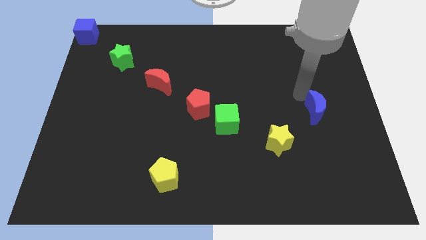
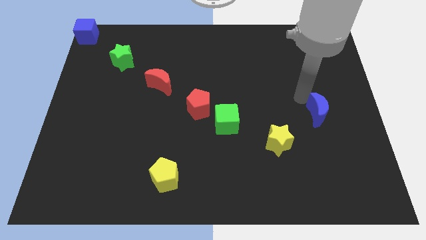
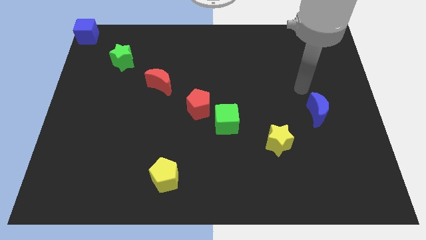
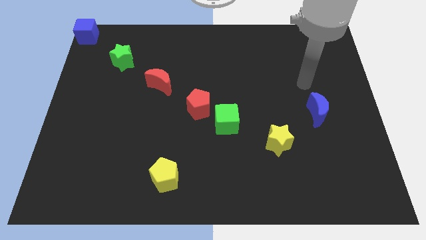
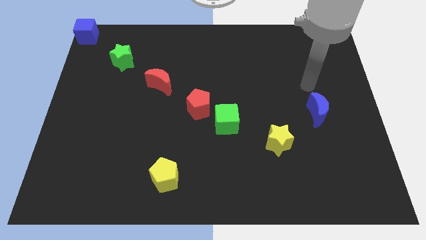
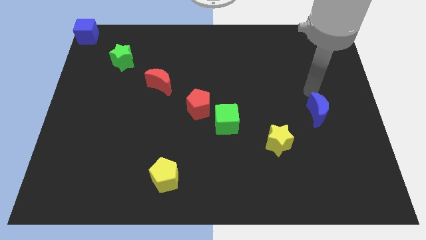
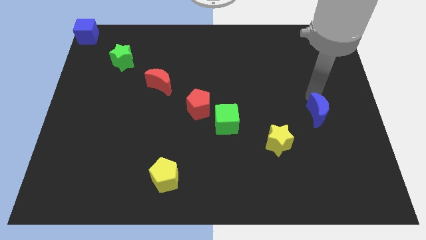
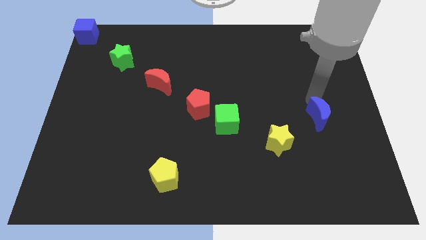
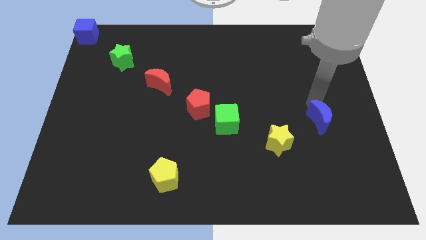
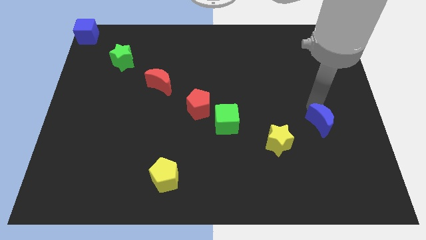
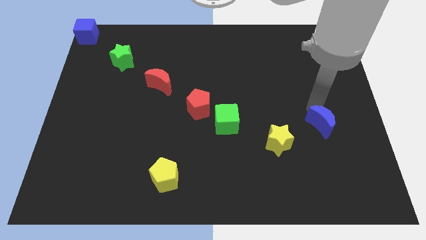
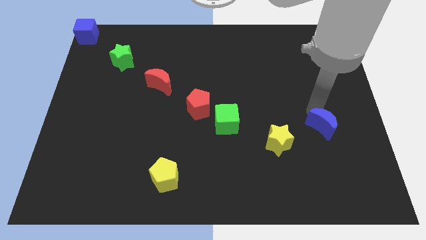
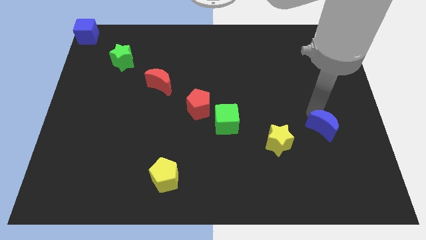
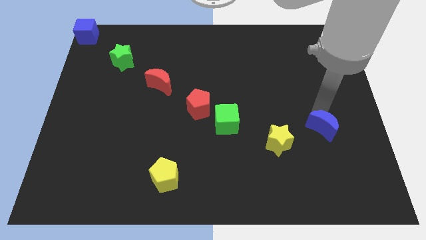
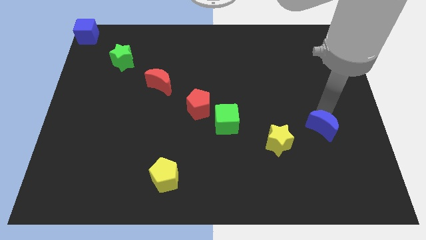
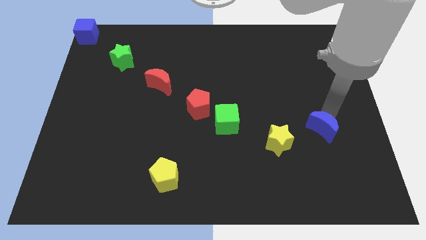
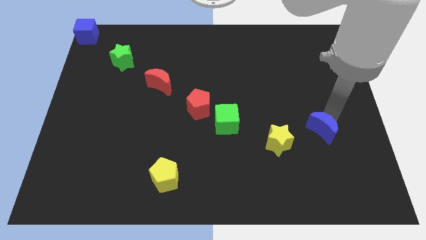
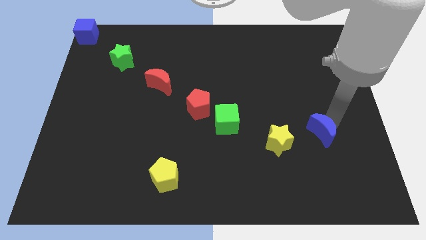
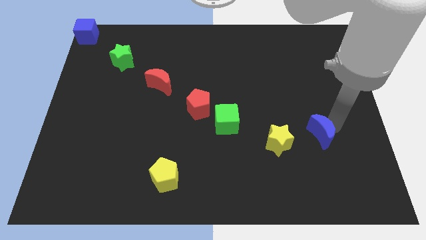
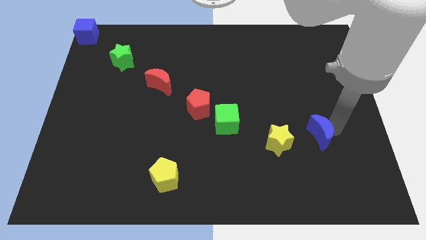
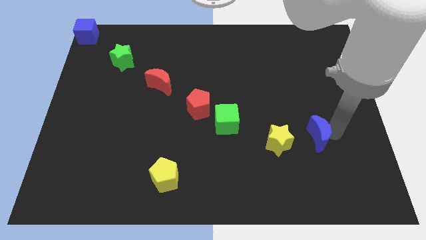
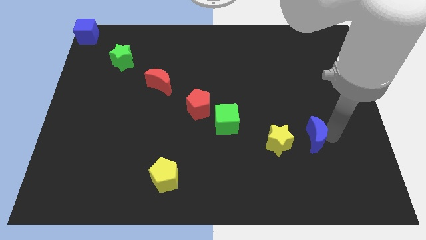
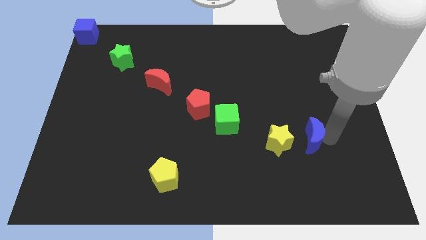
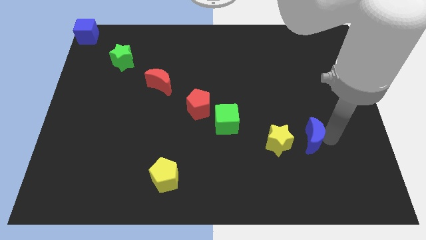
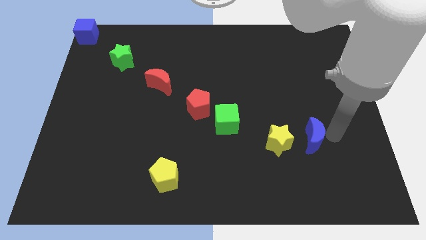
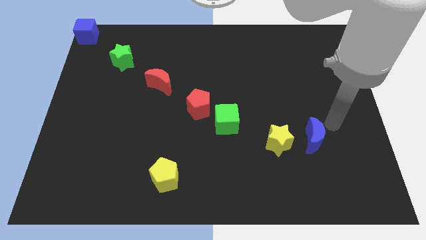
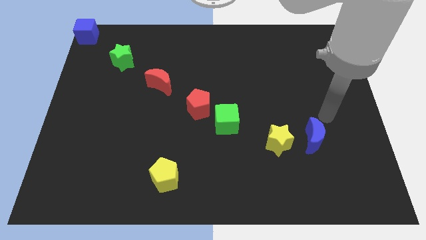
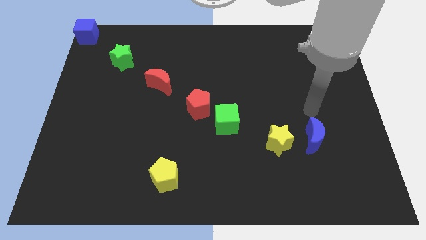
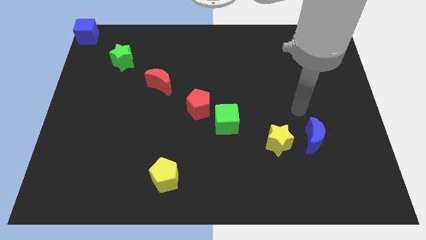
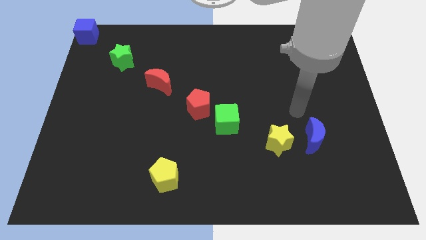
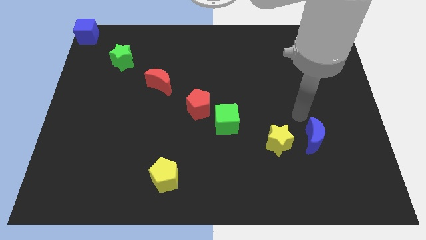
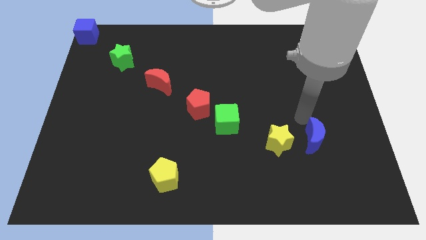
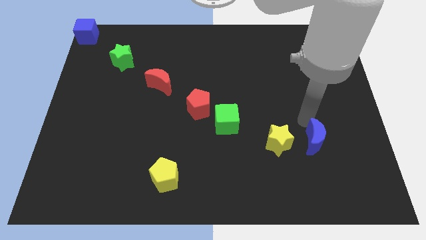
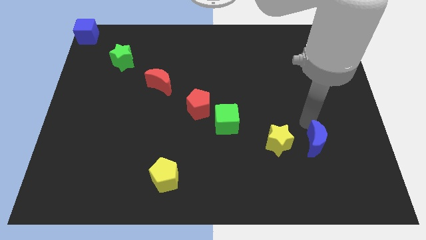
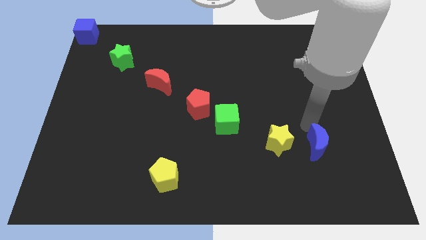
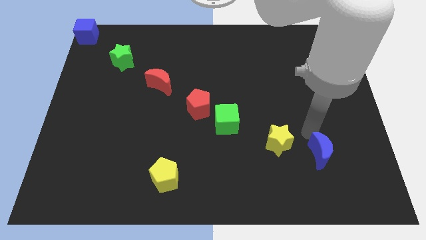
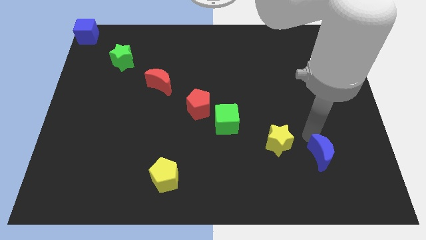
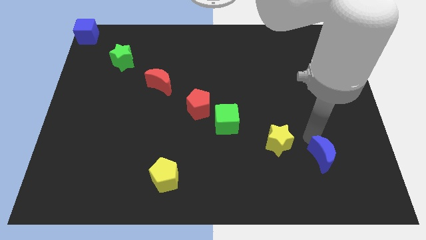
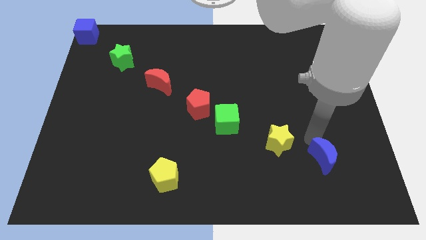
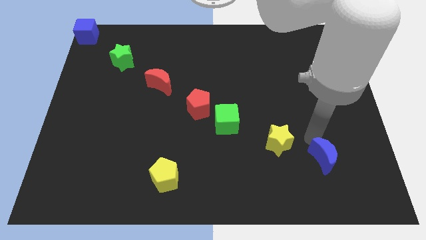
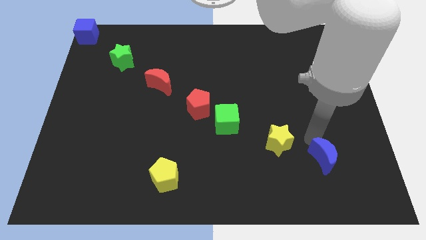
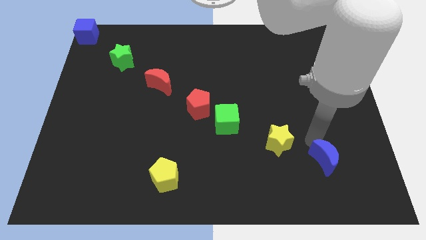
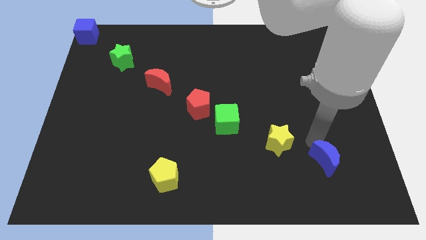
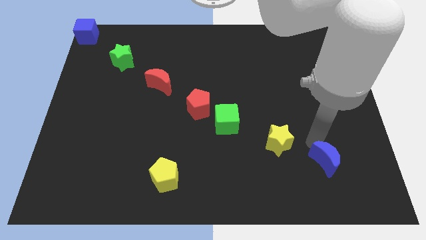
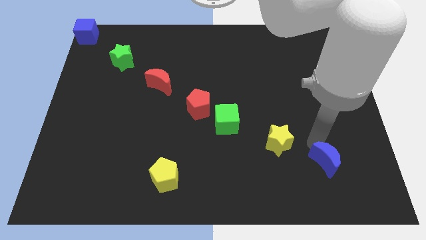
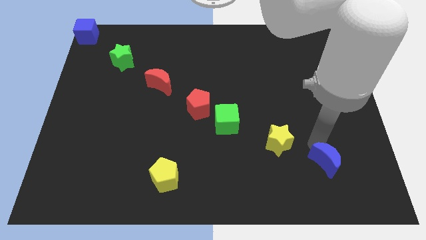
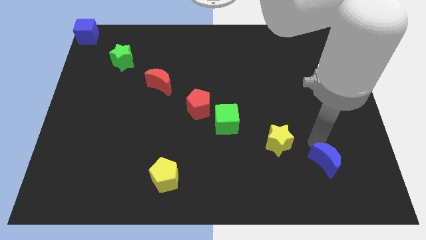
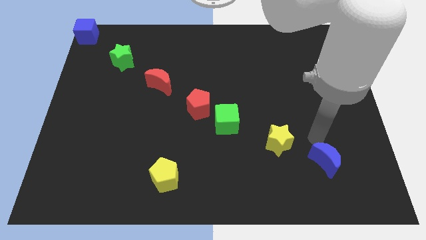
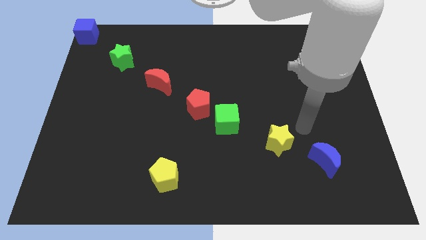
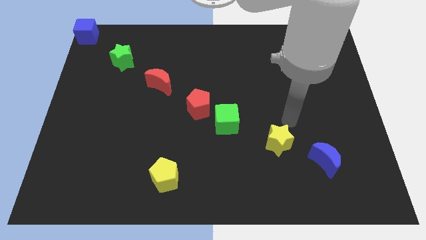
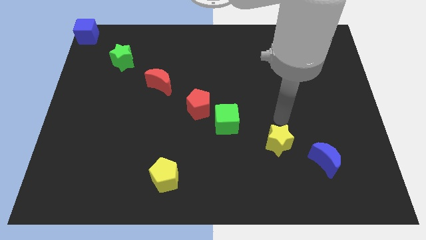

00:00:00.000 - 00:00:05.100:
move the blue crescent to the bottom right of the yellow star

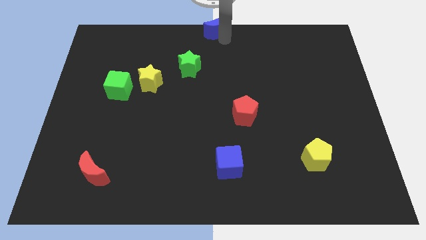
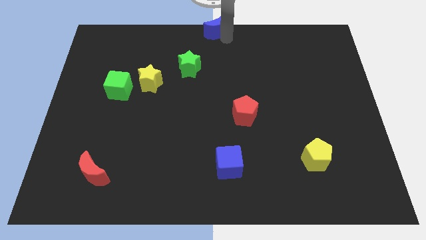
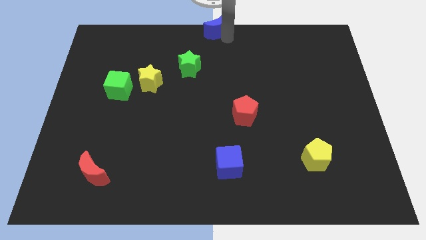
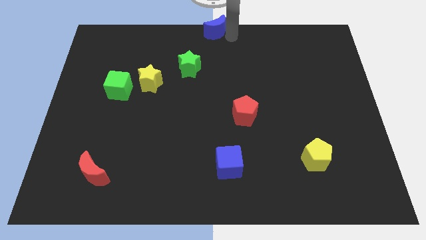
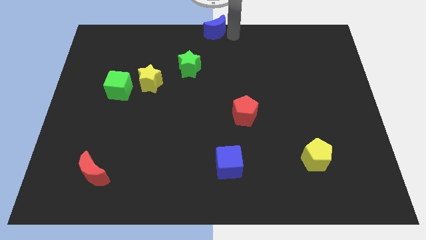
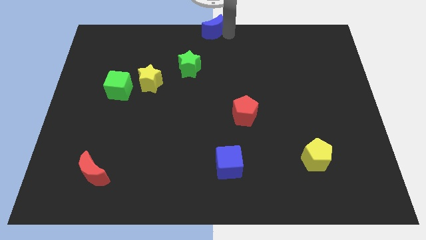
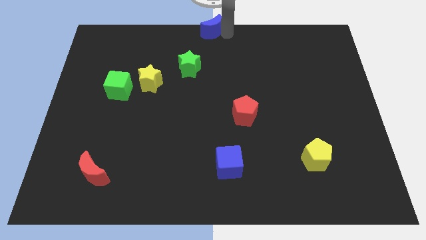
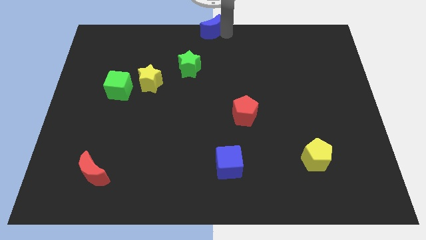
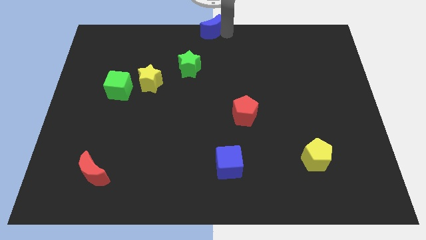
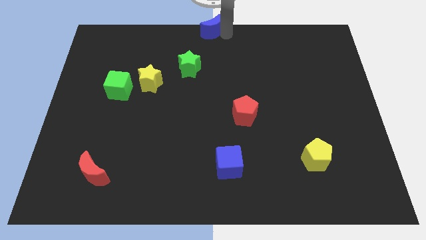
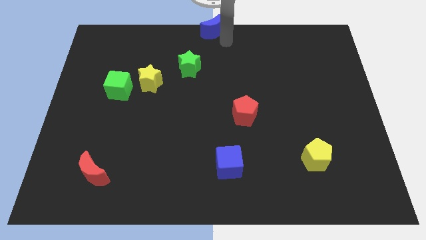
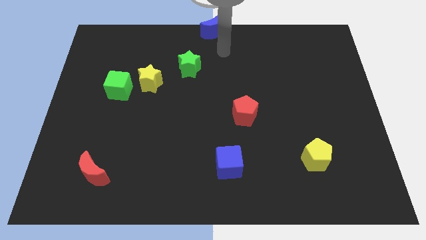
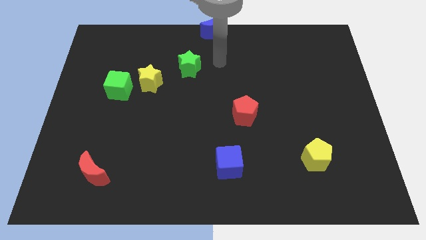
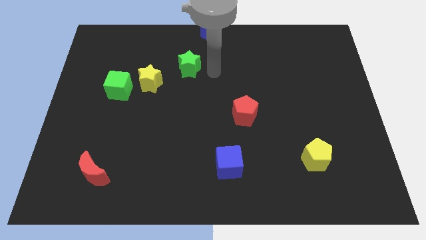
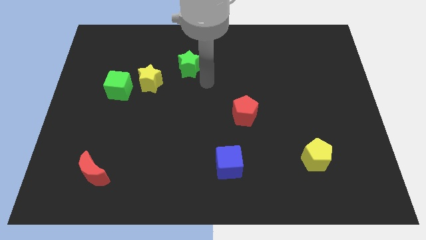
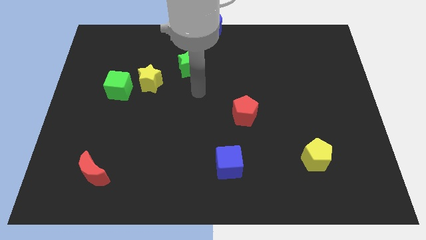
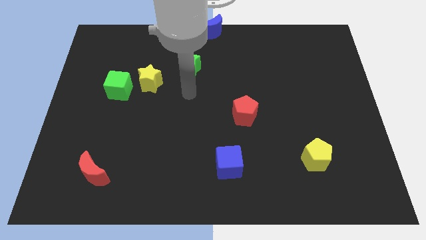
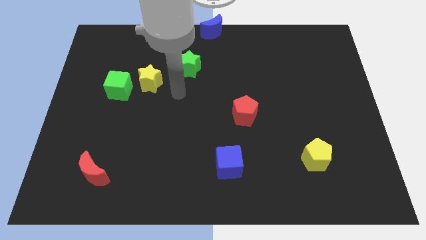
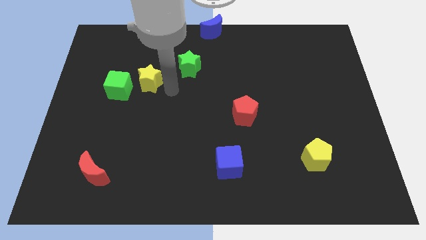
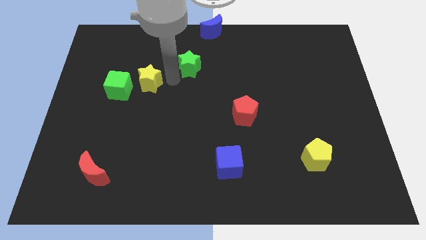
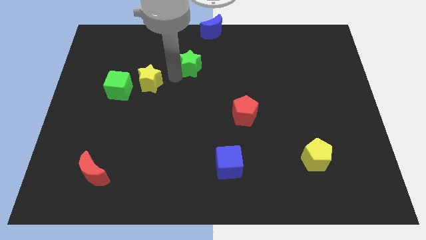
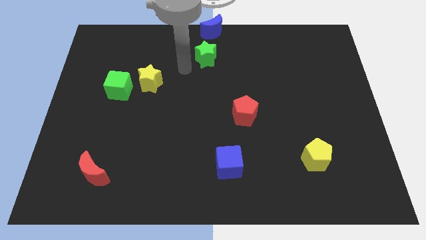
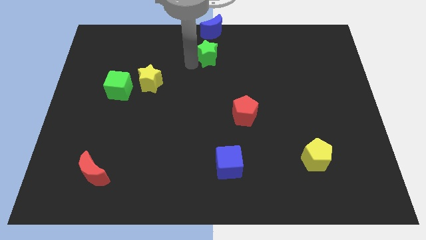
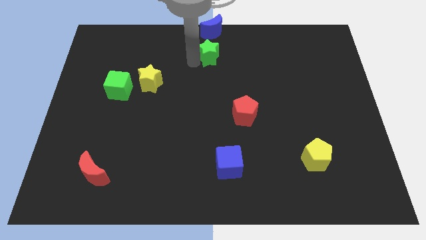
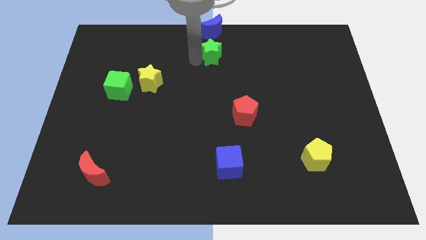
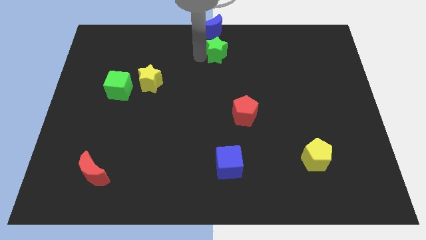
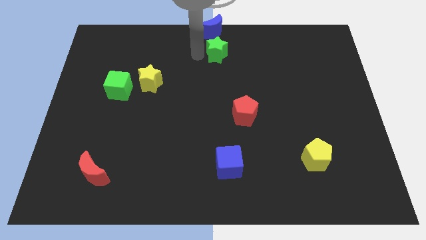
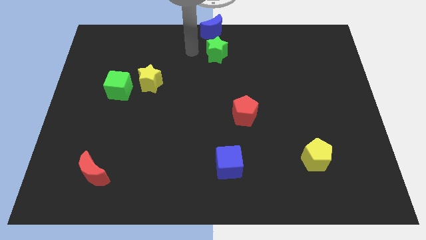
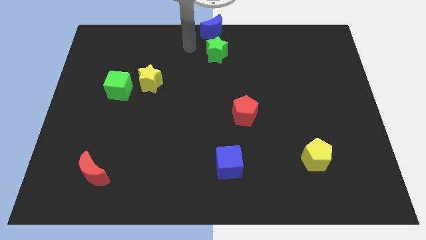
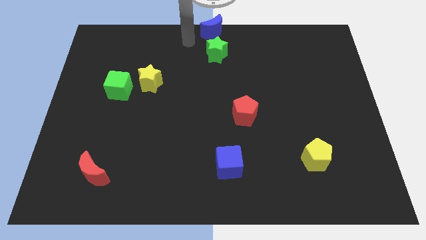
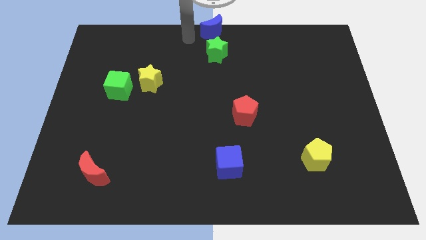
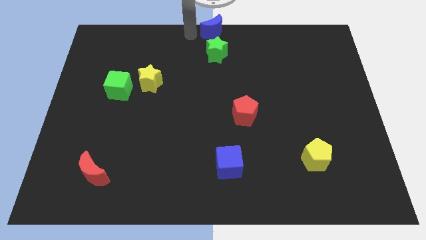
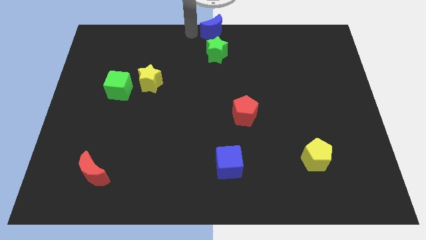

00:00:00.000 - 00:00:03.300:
place the green star below the blue moon

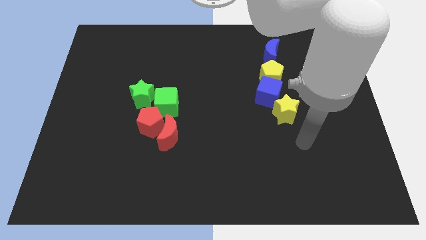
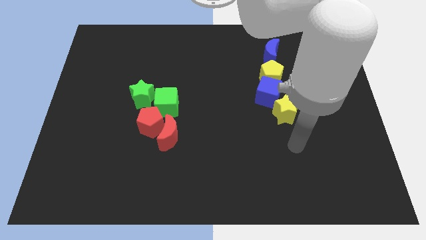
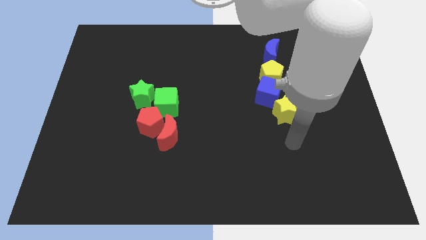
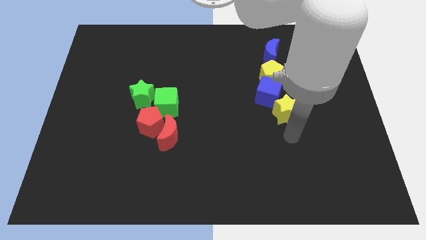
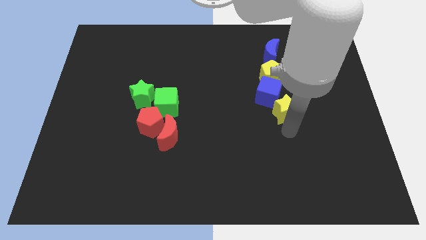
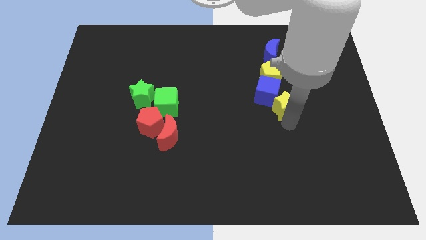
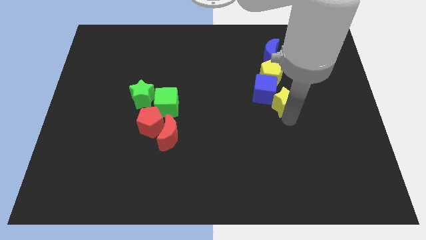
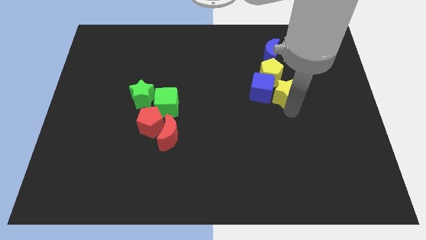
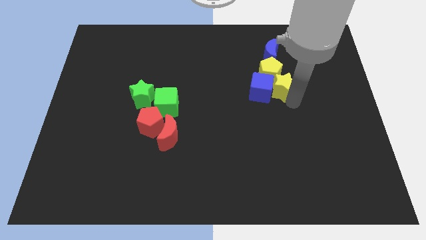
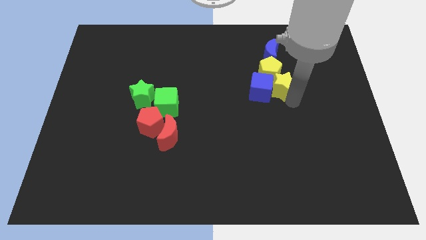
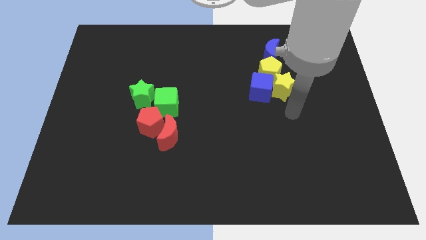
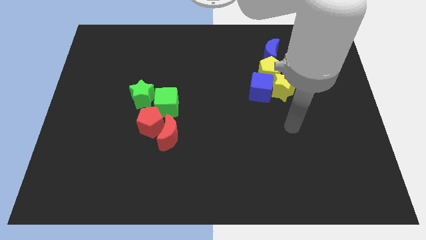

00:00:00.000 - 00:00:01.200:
place yellow star into yellow pentagon
